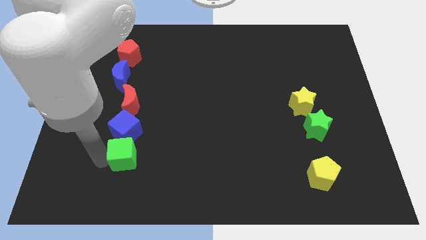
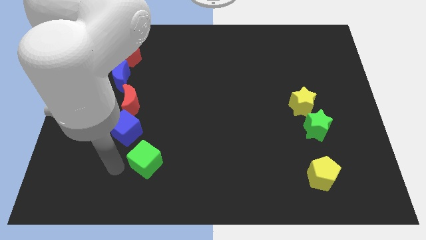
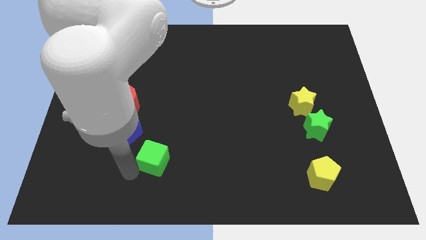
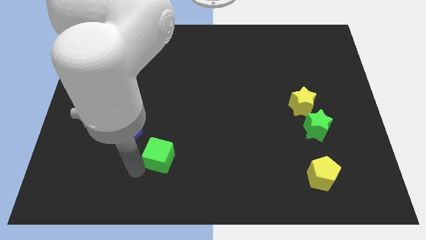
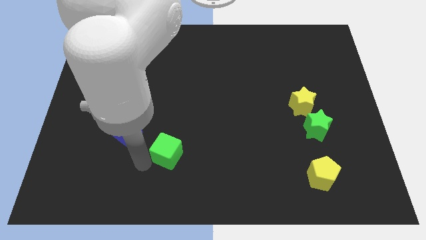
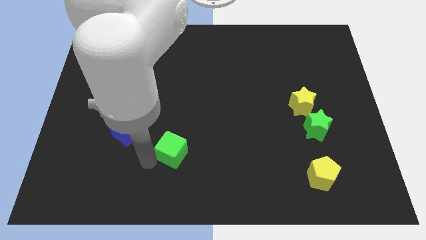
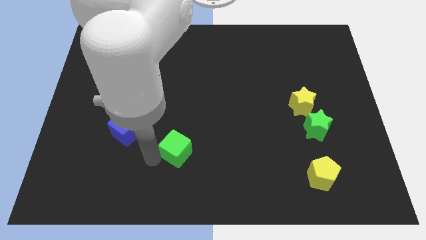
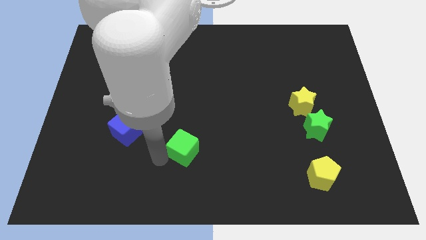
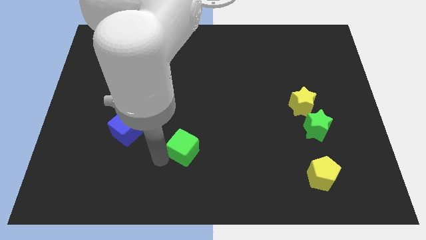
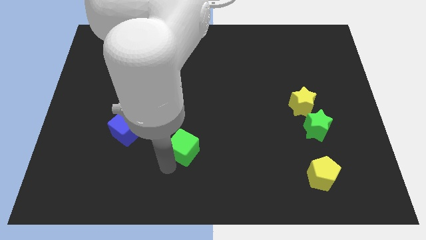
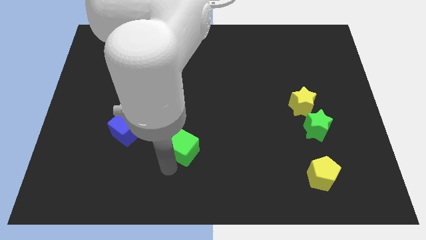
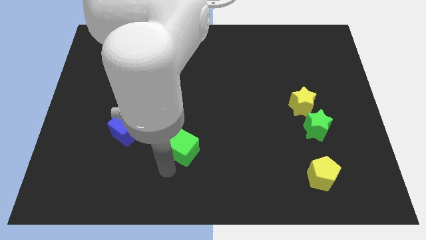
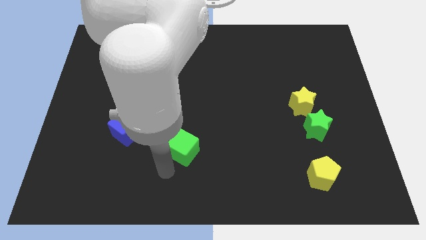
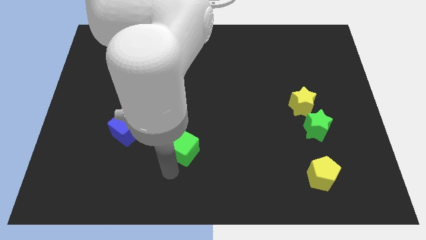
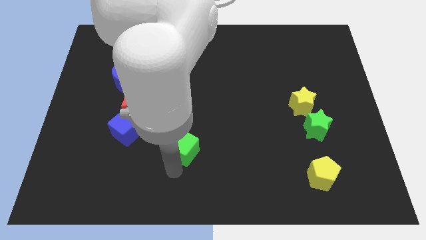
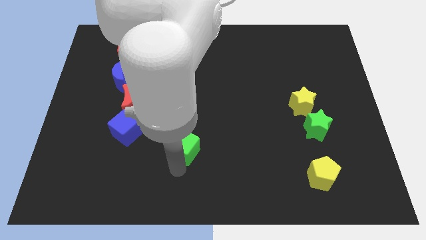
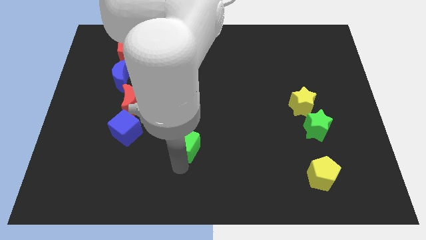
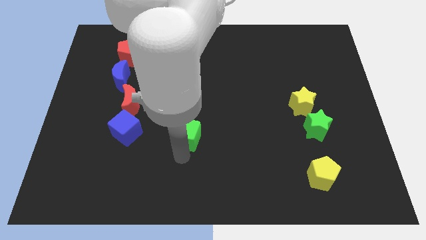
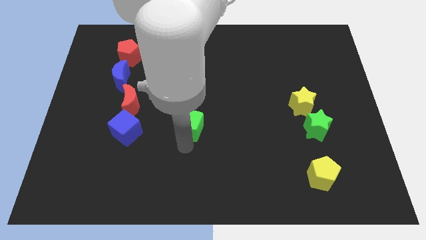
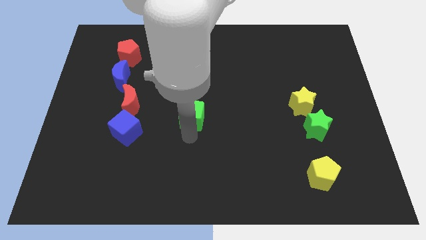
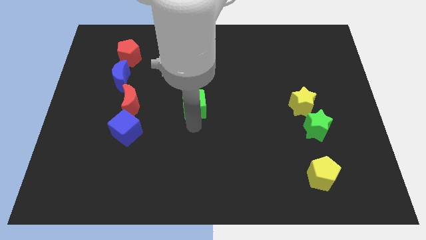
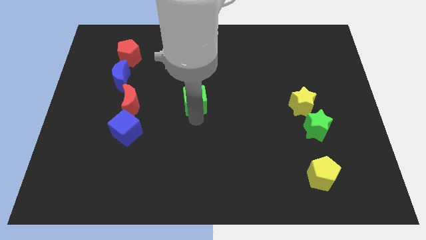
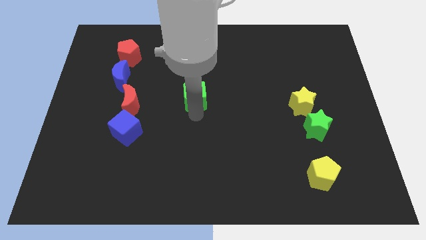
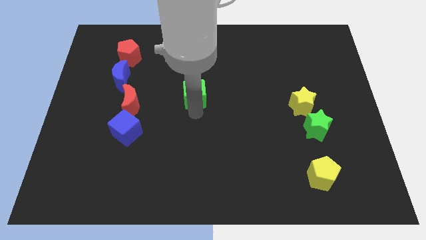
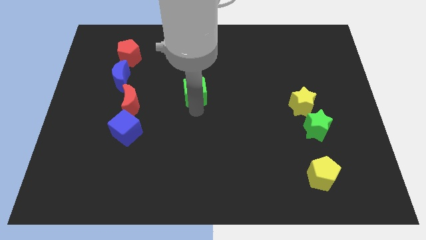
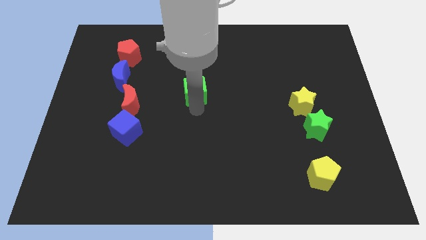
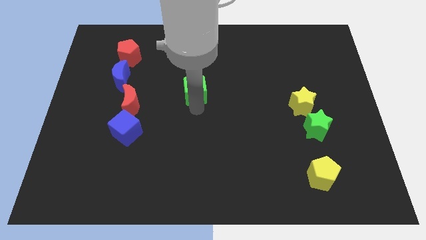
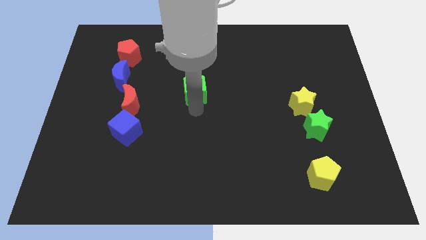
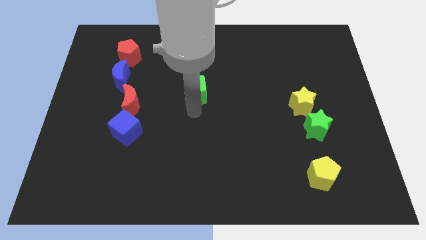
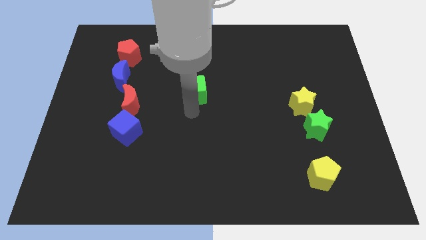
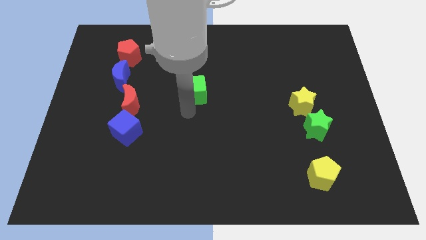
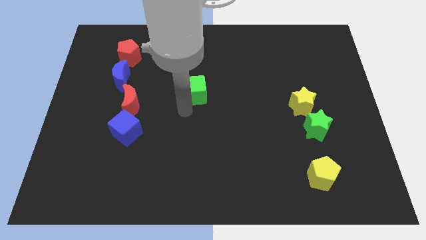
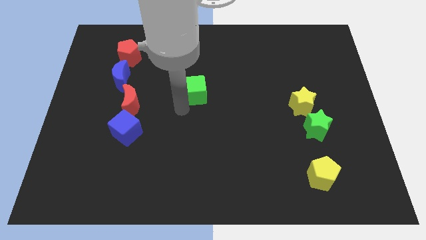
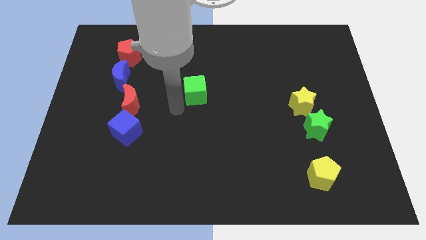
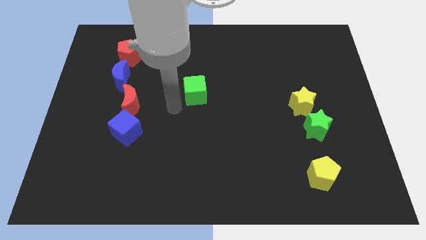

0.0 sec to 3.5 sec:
slide the green cube towards the top centre of the board

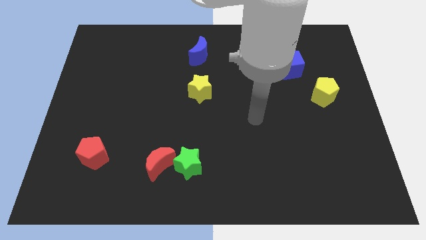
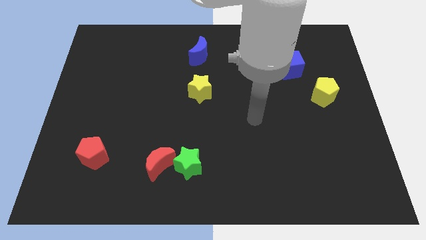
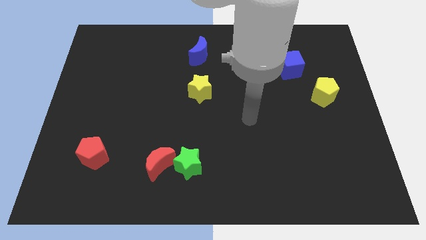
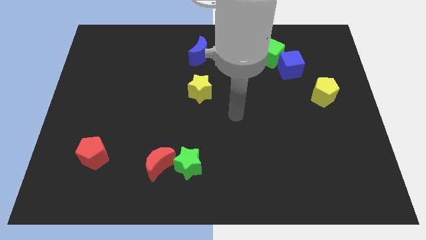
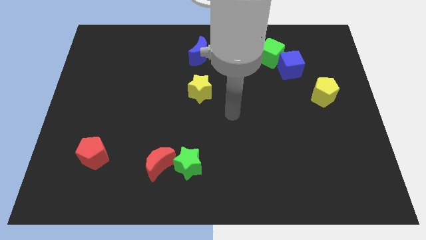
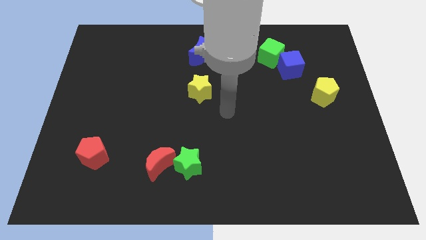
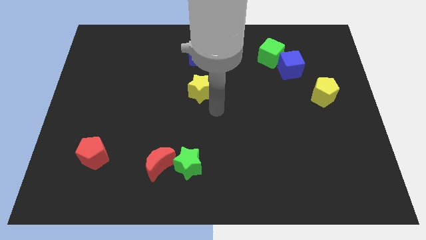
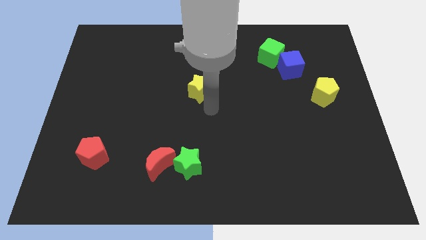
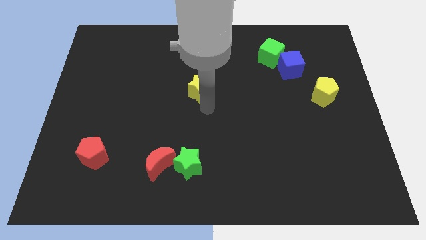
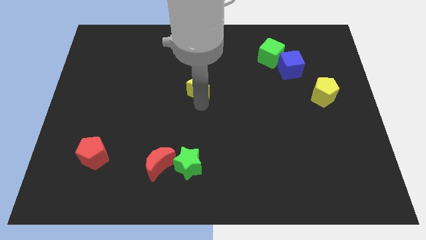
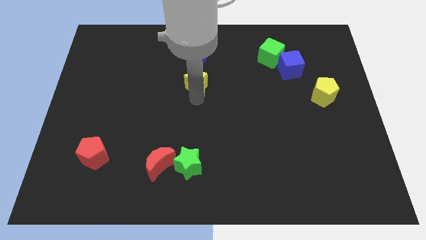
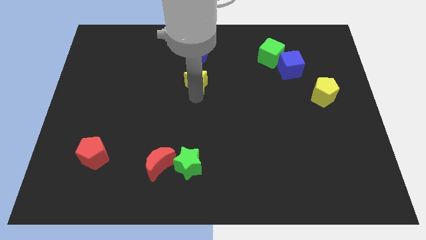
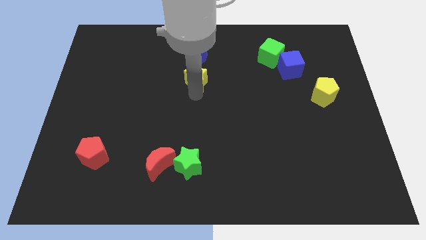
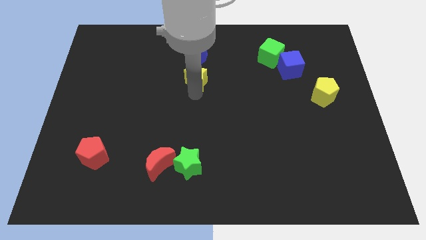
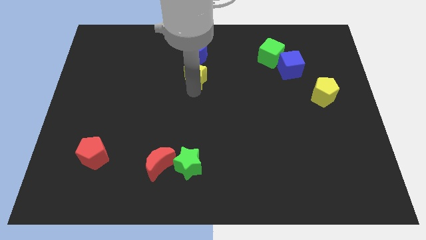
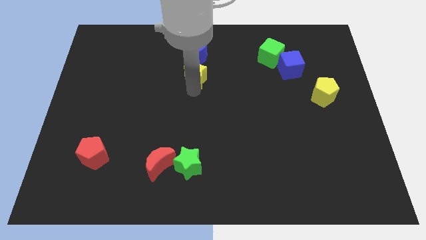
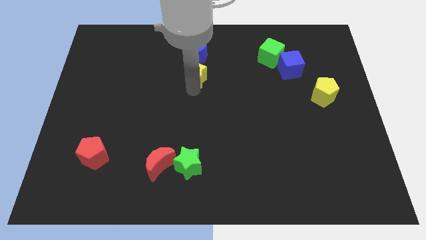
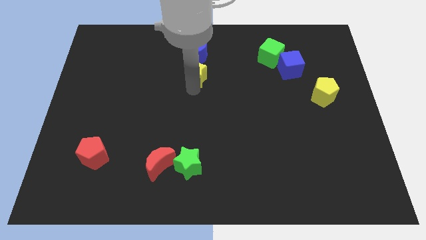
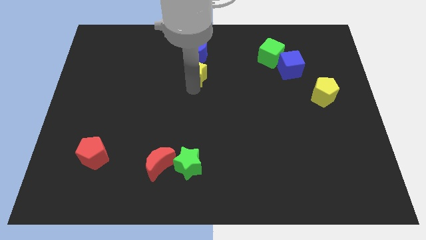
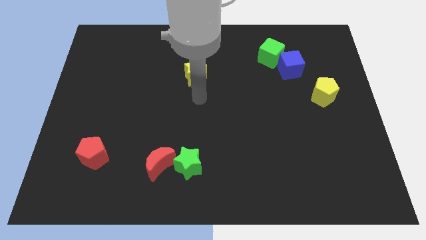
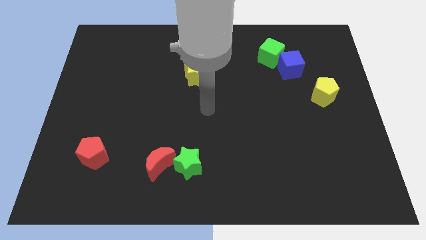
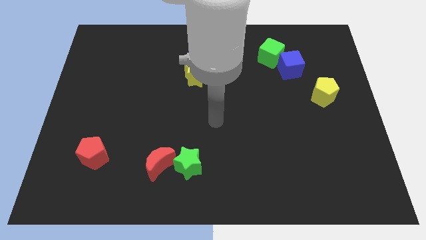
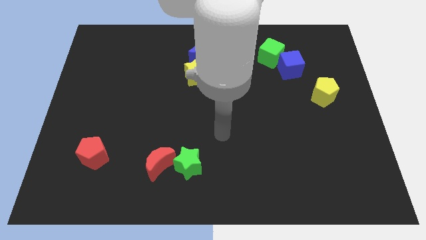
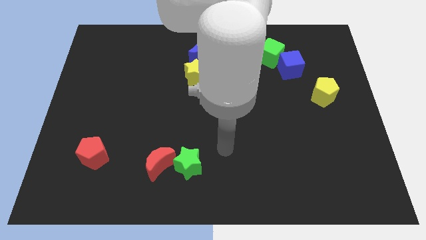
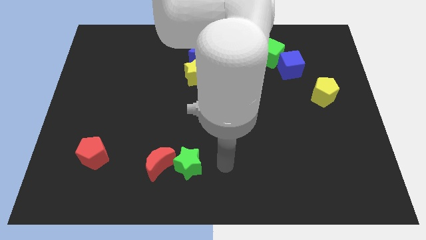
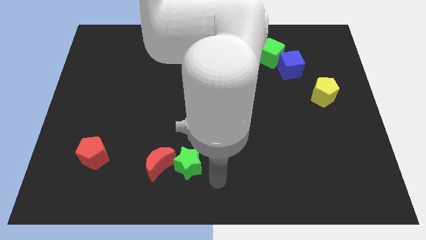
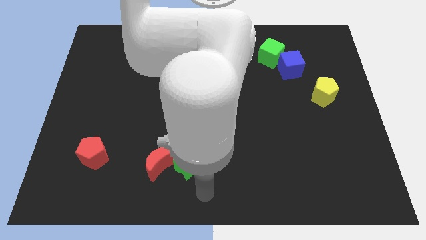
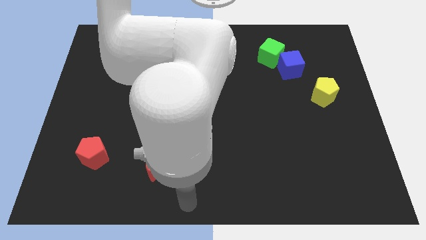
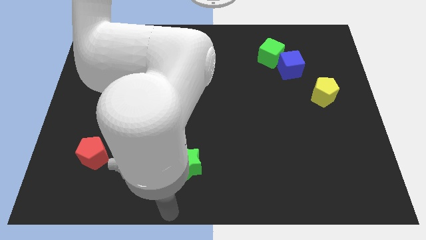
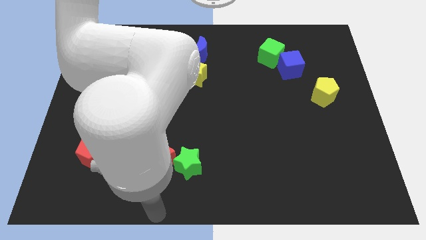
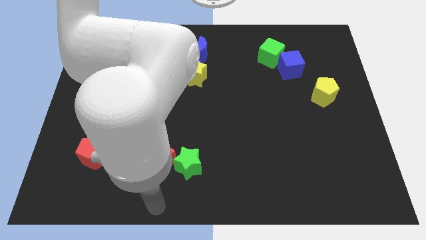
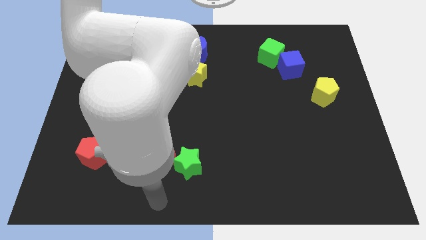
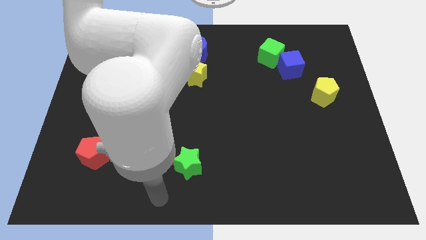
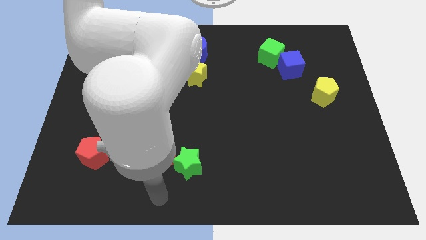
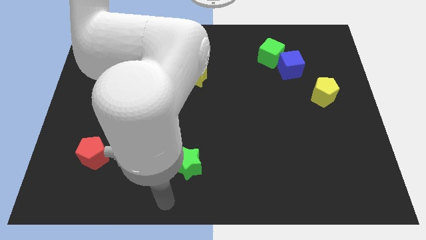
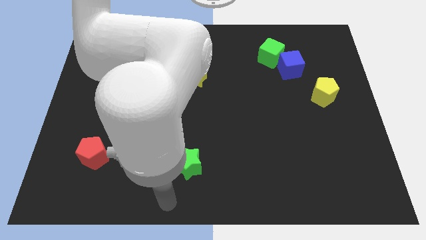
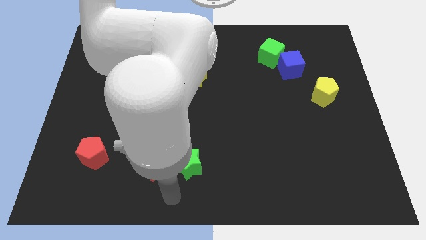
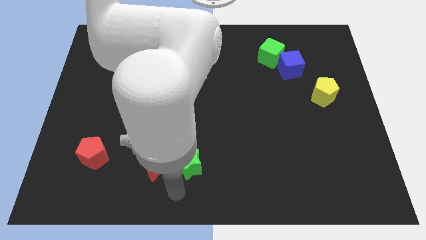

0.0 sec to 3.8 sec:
push the yellow star into the blue moon

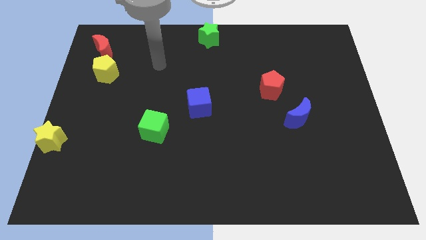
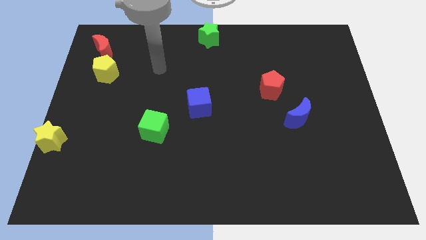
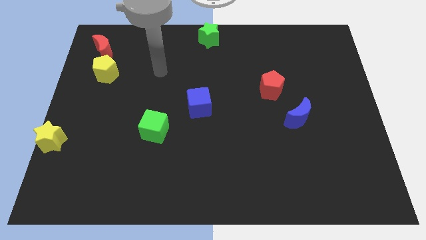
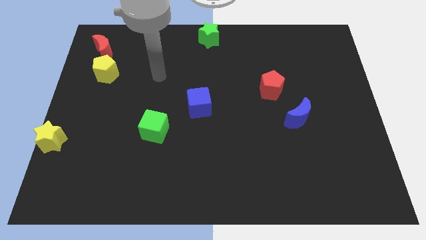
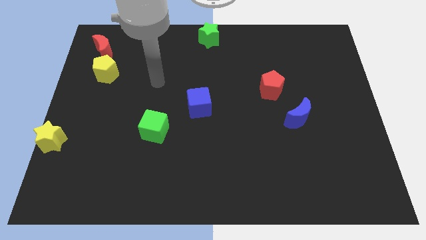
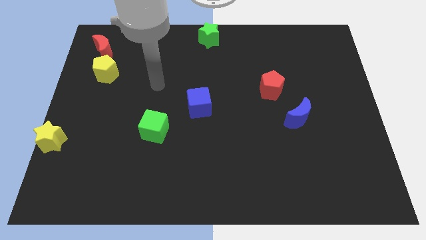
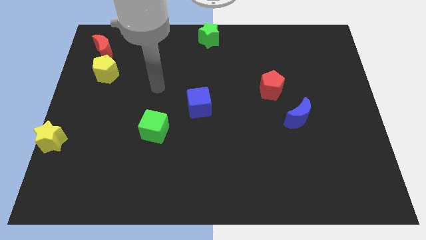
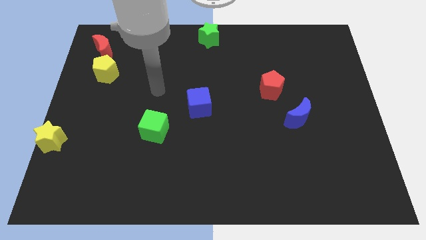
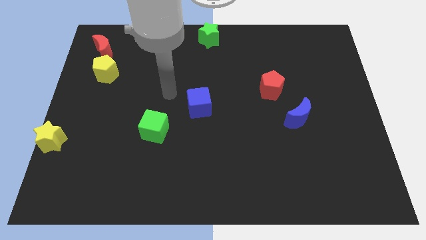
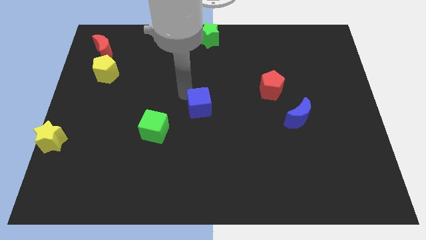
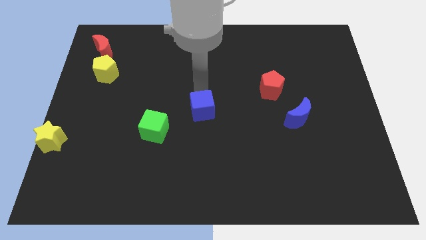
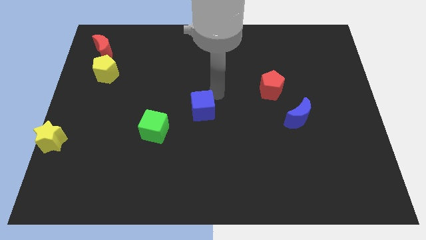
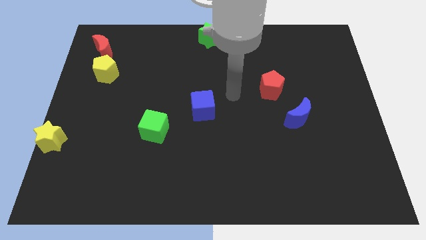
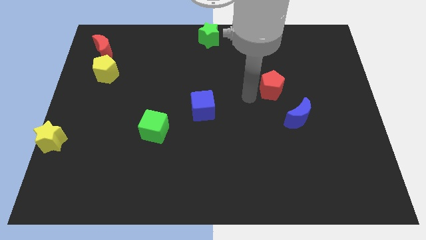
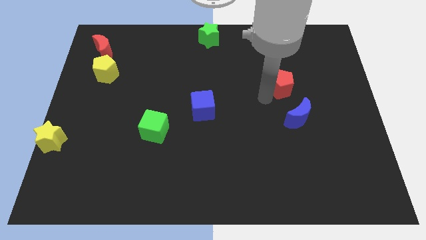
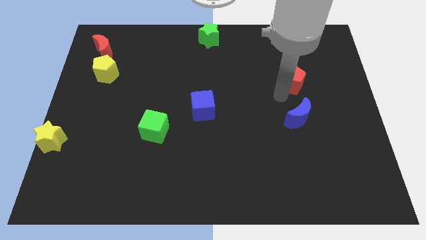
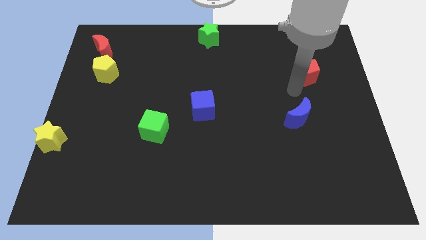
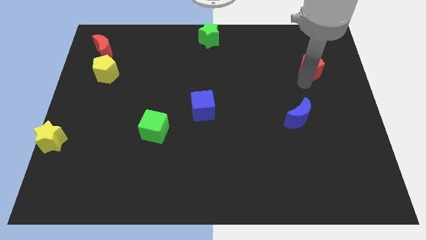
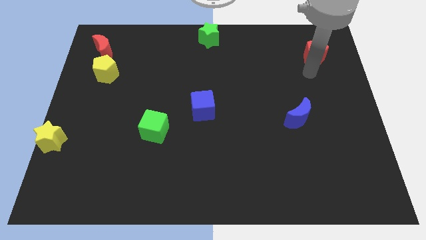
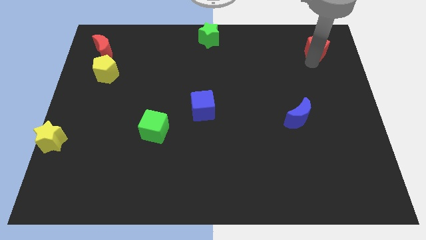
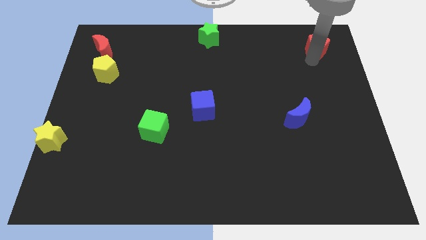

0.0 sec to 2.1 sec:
place red pentagon at the top right corner of the board
